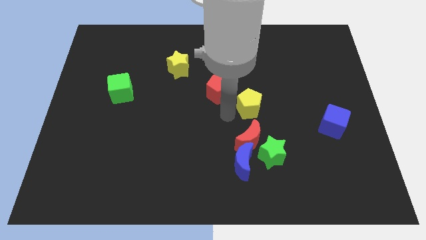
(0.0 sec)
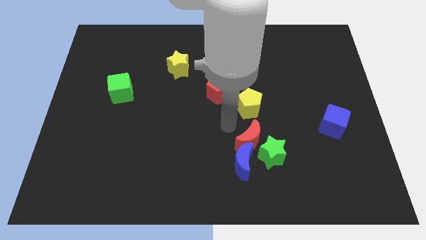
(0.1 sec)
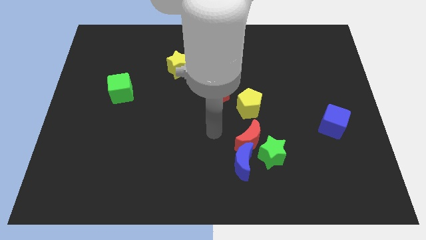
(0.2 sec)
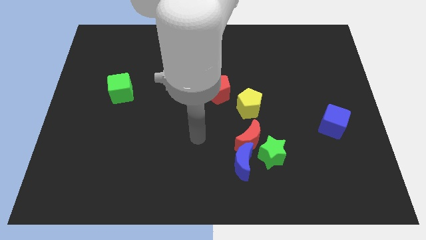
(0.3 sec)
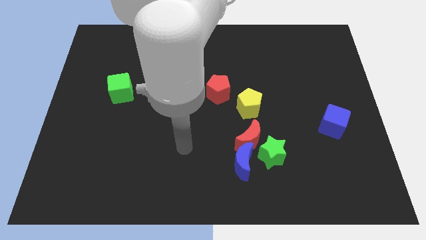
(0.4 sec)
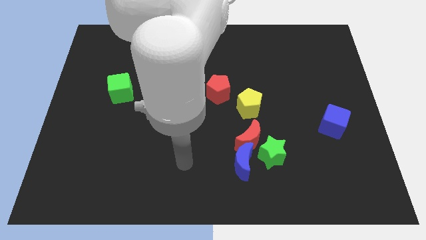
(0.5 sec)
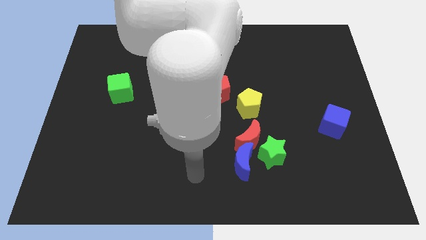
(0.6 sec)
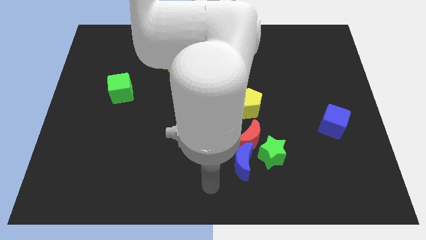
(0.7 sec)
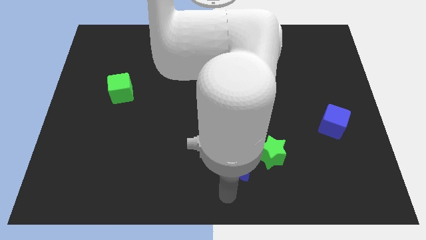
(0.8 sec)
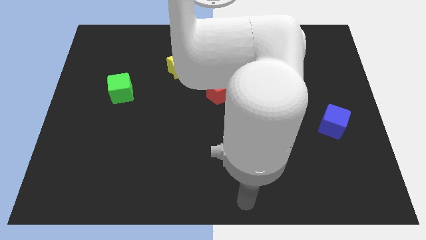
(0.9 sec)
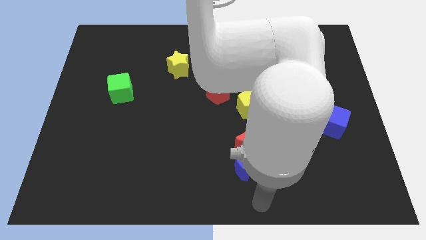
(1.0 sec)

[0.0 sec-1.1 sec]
place your arm to the bottom of the red crescent

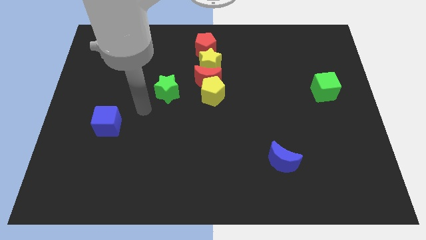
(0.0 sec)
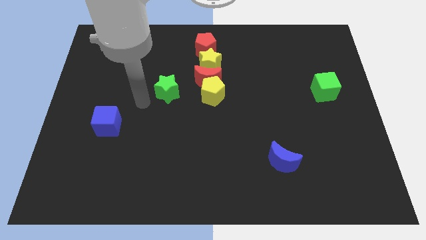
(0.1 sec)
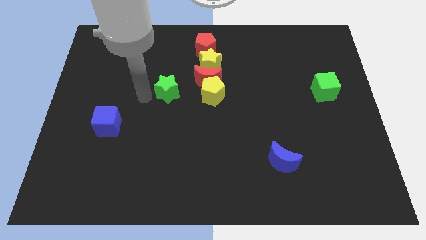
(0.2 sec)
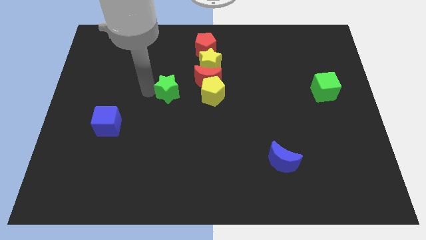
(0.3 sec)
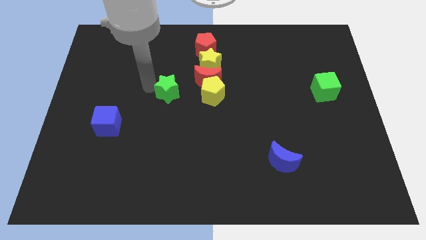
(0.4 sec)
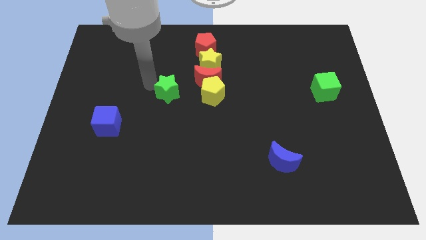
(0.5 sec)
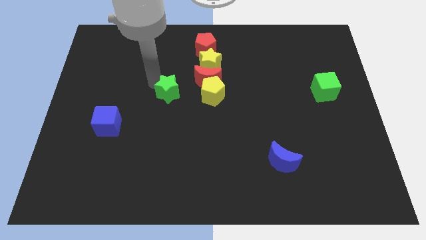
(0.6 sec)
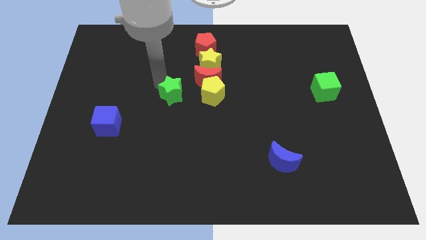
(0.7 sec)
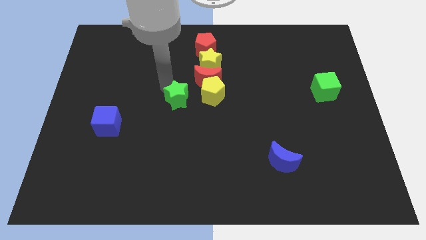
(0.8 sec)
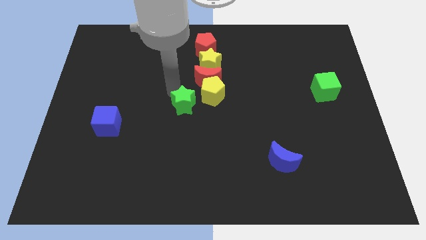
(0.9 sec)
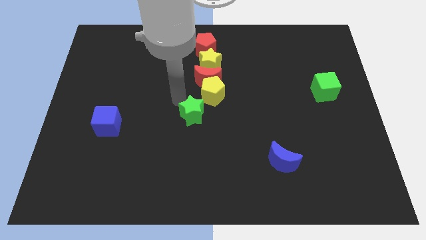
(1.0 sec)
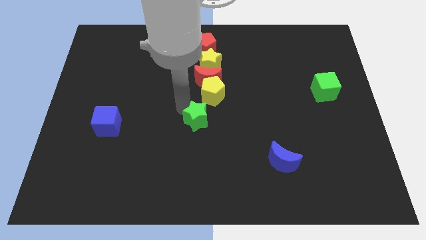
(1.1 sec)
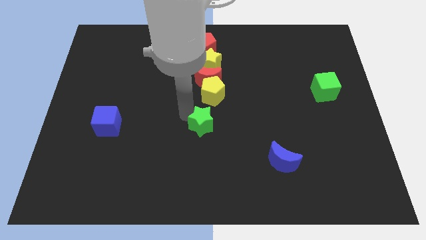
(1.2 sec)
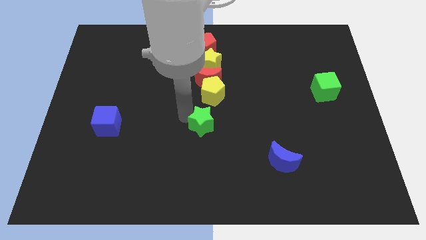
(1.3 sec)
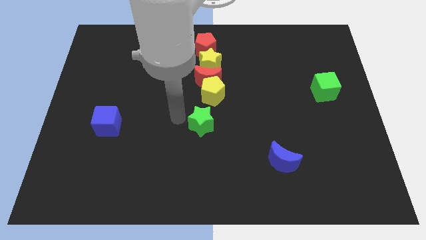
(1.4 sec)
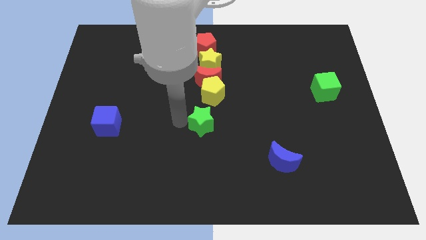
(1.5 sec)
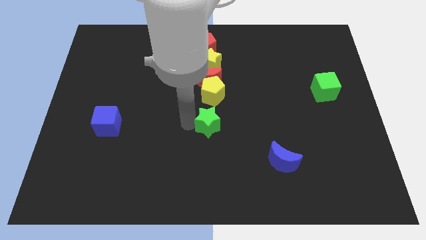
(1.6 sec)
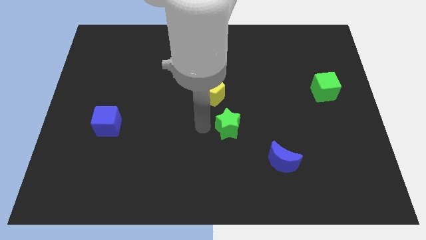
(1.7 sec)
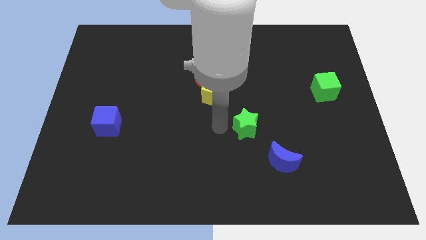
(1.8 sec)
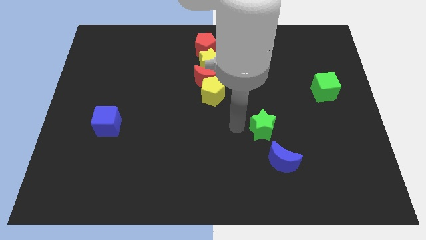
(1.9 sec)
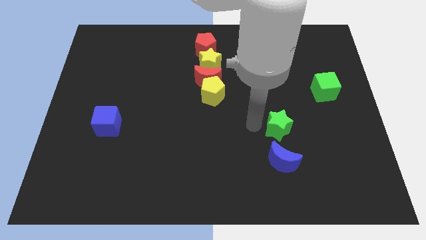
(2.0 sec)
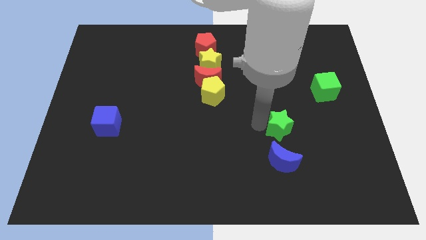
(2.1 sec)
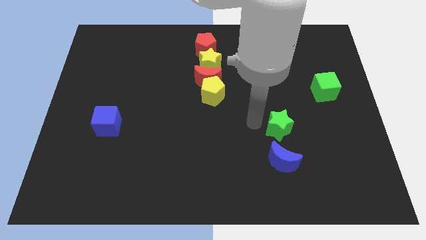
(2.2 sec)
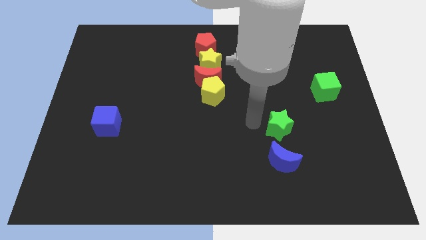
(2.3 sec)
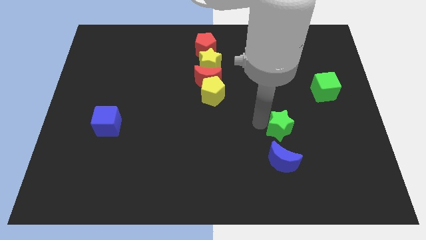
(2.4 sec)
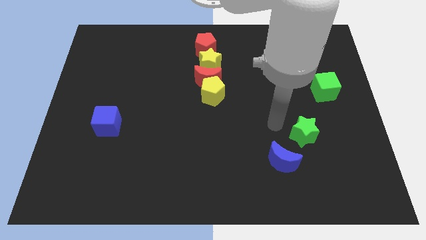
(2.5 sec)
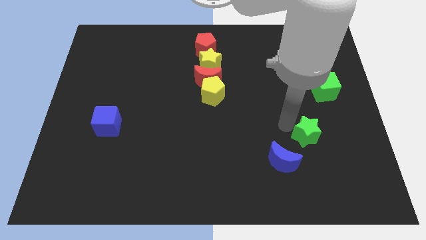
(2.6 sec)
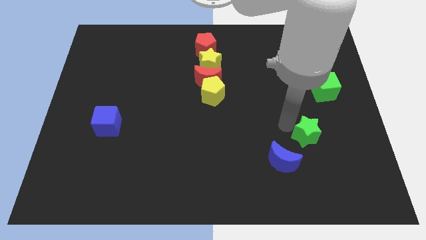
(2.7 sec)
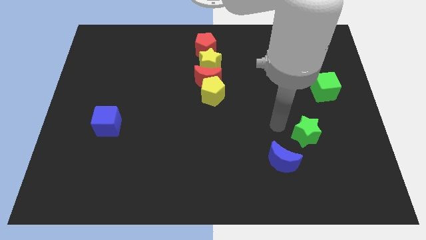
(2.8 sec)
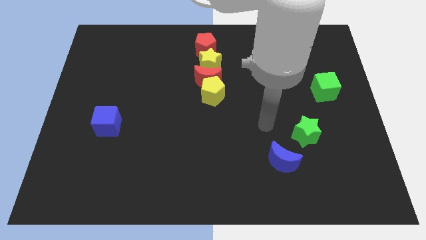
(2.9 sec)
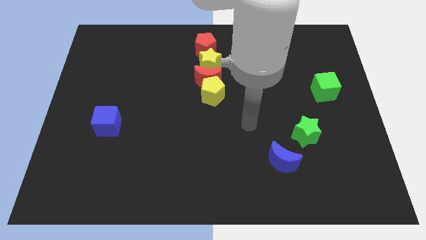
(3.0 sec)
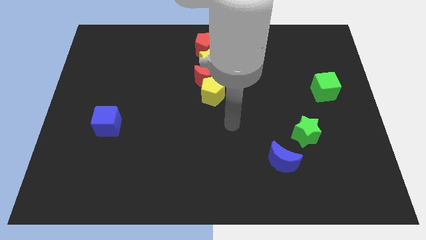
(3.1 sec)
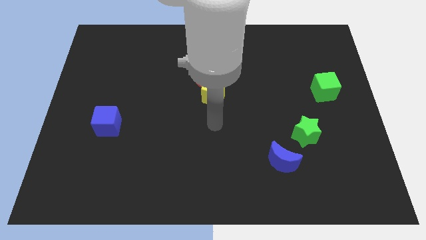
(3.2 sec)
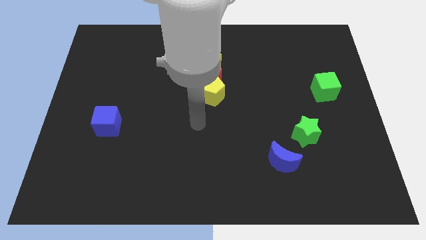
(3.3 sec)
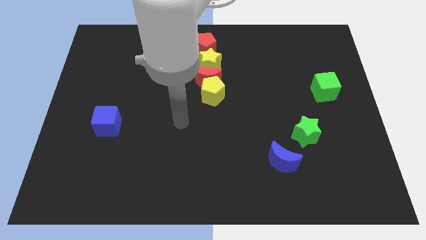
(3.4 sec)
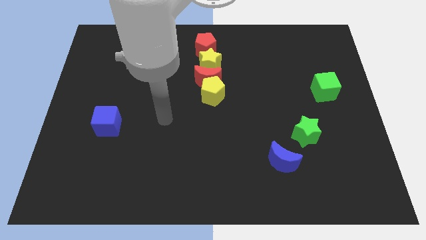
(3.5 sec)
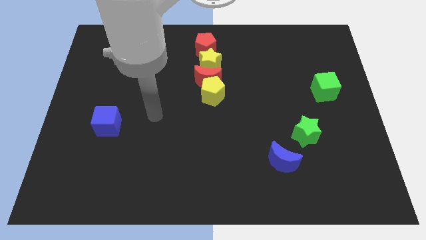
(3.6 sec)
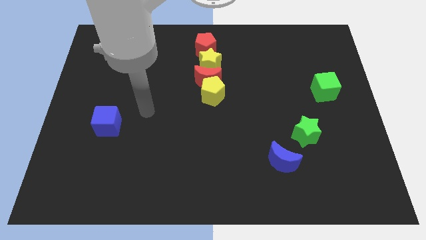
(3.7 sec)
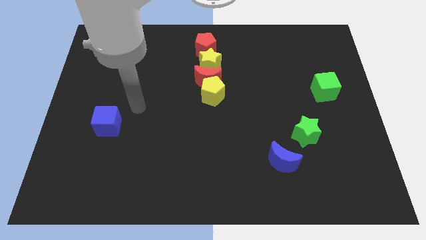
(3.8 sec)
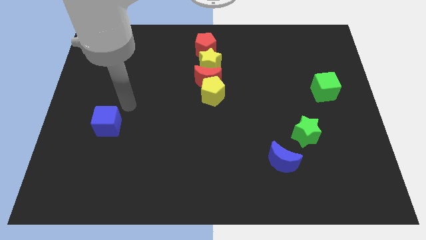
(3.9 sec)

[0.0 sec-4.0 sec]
place the green star in between the green cube and blue moon

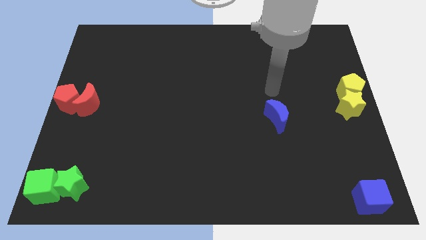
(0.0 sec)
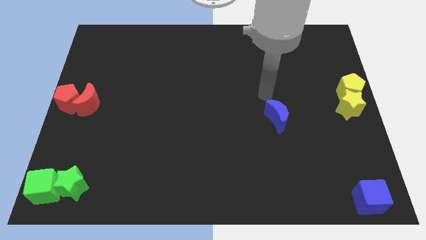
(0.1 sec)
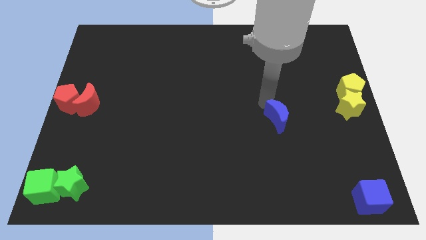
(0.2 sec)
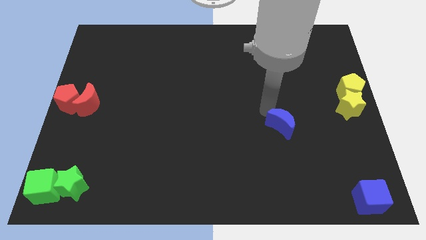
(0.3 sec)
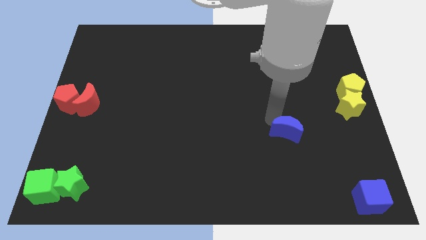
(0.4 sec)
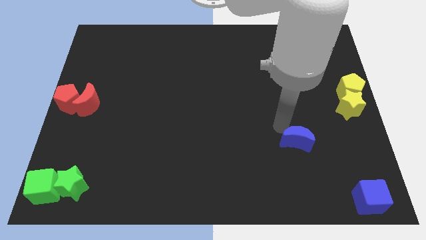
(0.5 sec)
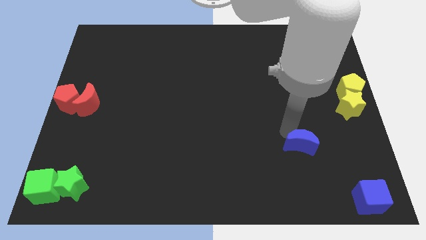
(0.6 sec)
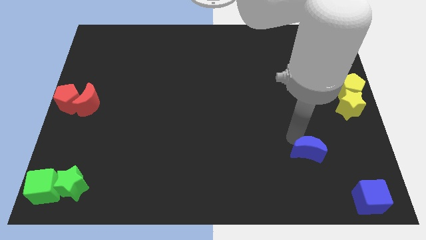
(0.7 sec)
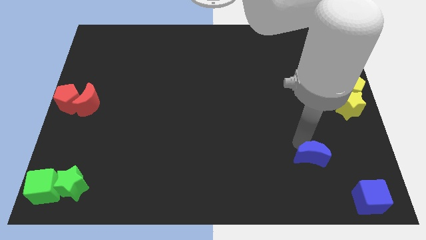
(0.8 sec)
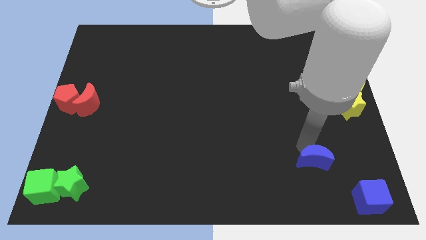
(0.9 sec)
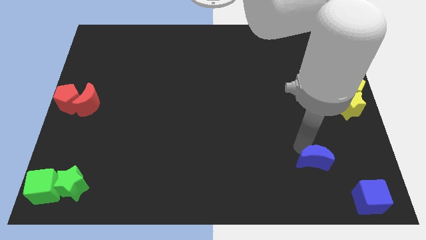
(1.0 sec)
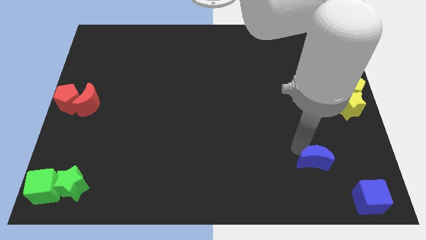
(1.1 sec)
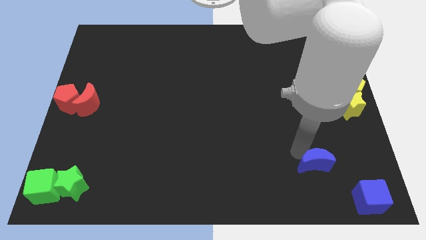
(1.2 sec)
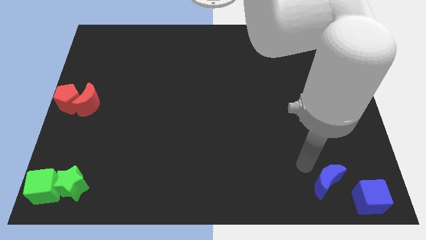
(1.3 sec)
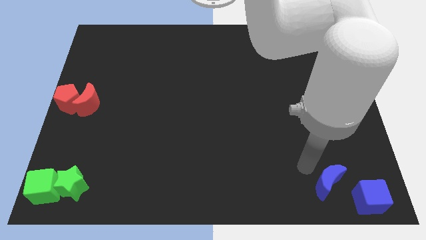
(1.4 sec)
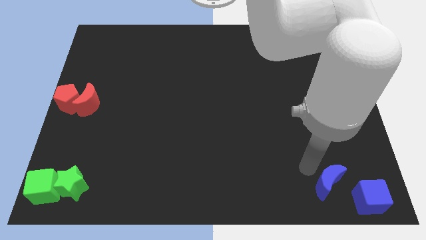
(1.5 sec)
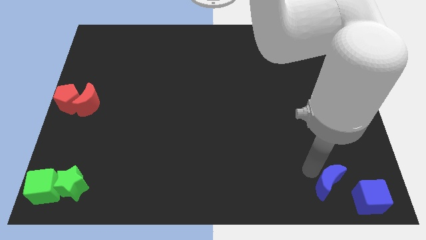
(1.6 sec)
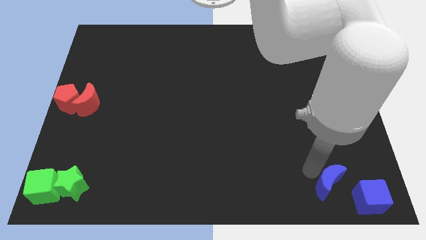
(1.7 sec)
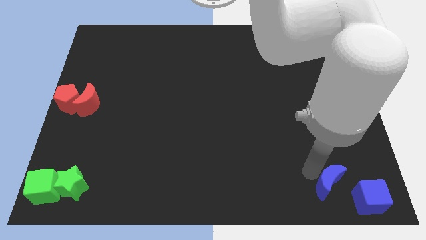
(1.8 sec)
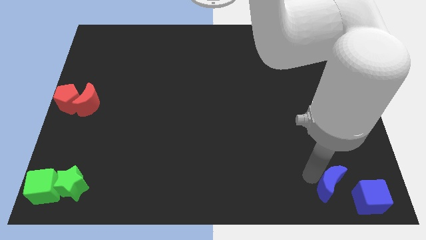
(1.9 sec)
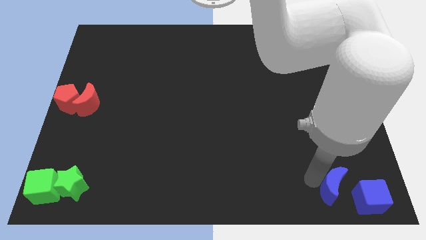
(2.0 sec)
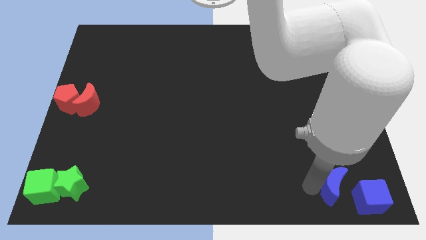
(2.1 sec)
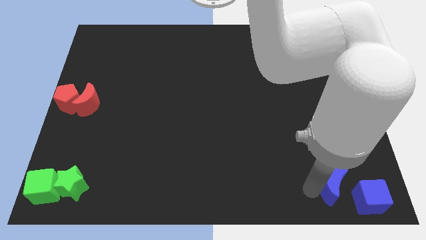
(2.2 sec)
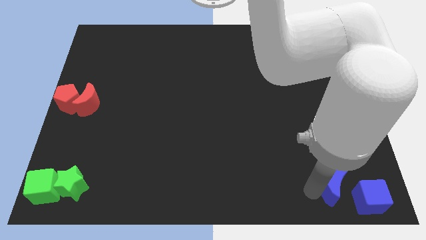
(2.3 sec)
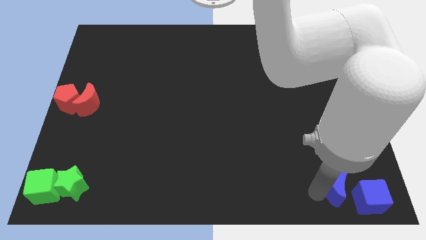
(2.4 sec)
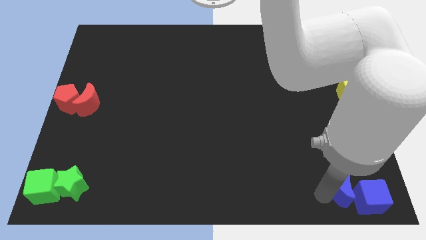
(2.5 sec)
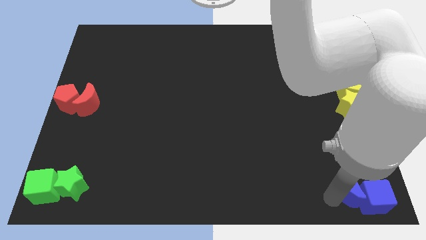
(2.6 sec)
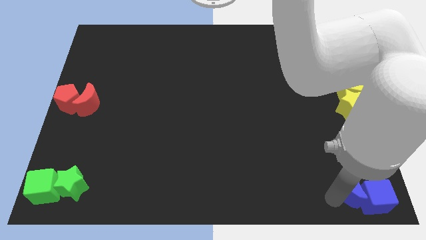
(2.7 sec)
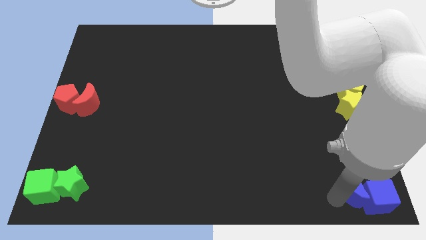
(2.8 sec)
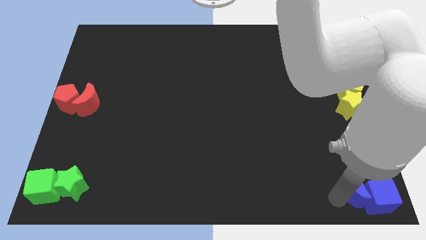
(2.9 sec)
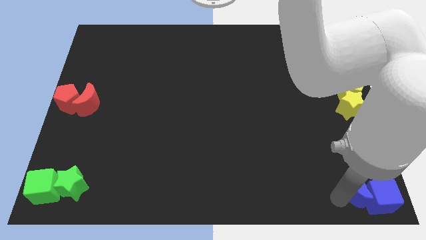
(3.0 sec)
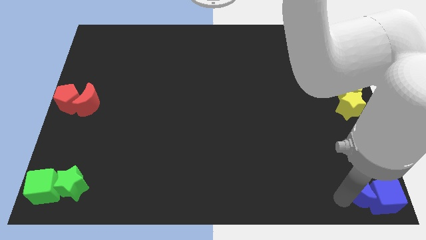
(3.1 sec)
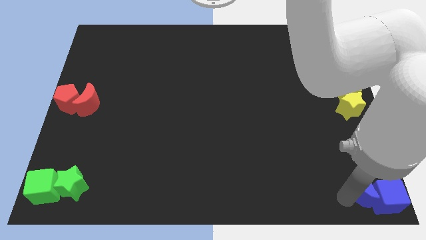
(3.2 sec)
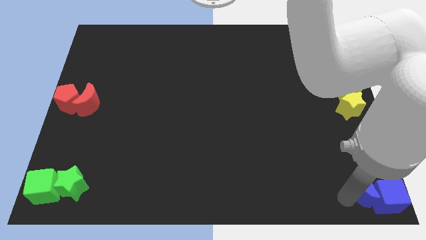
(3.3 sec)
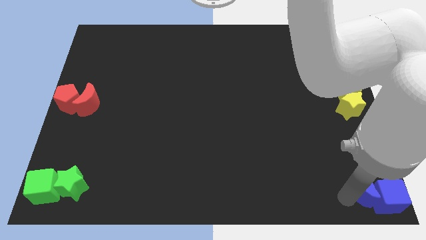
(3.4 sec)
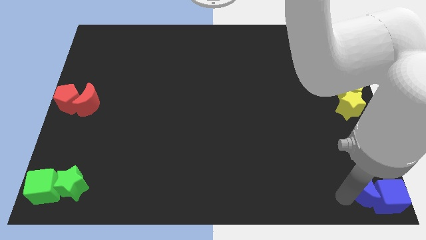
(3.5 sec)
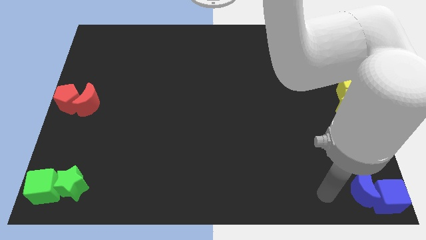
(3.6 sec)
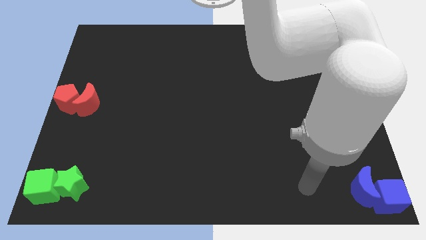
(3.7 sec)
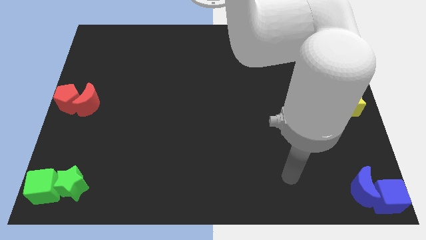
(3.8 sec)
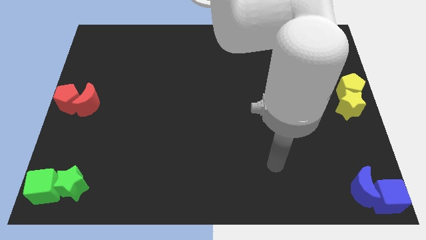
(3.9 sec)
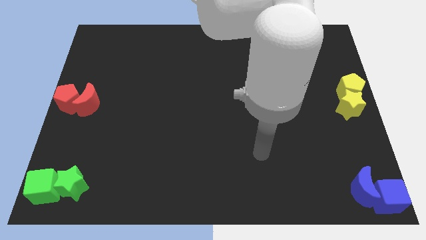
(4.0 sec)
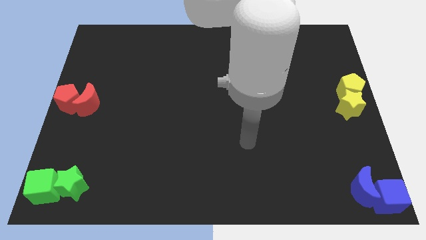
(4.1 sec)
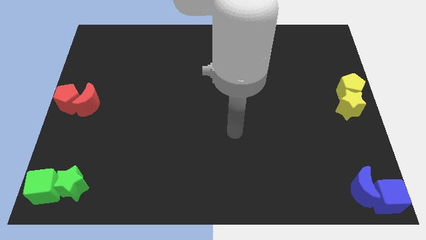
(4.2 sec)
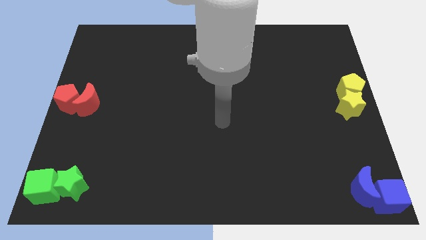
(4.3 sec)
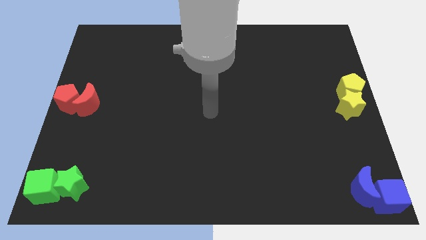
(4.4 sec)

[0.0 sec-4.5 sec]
place the blue crescent close to blue cube
